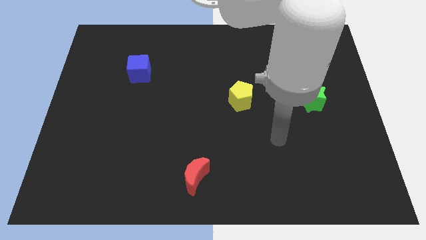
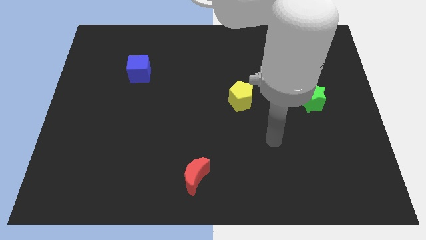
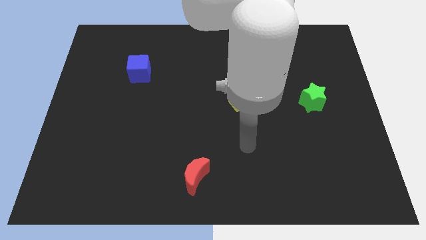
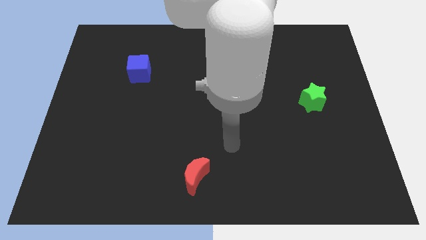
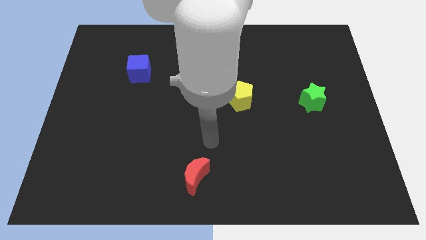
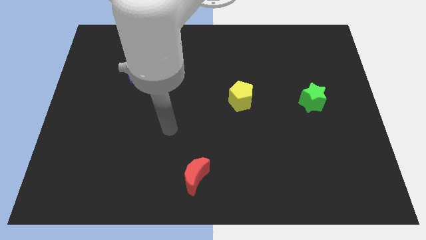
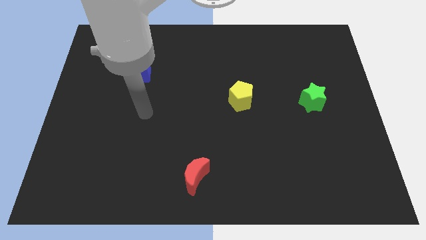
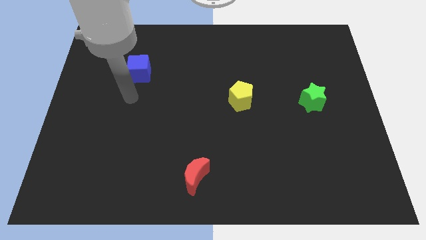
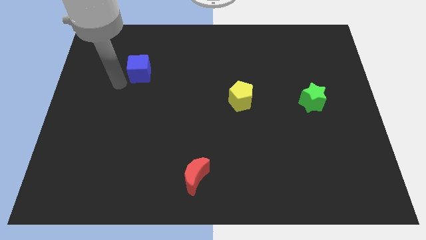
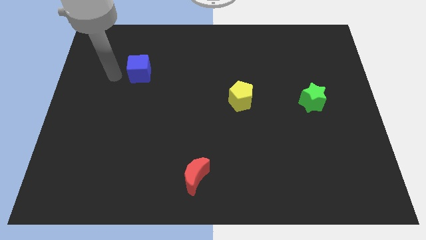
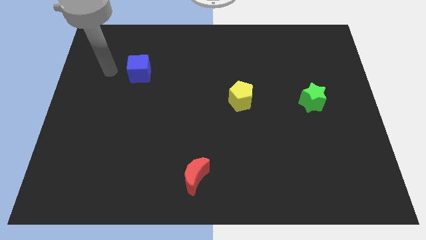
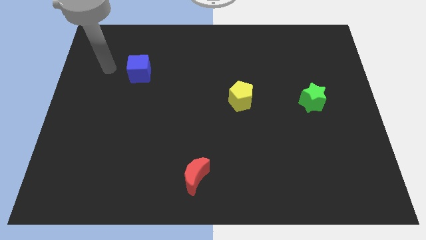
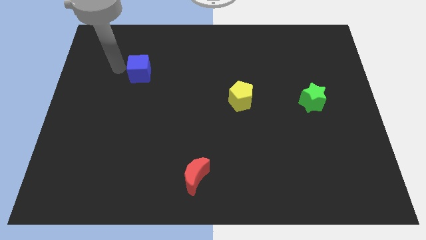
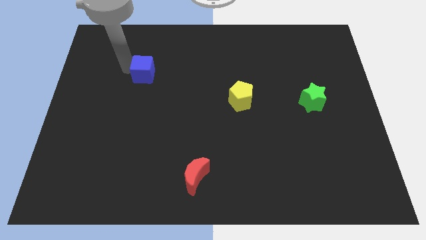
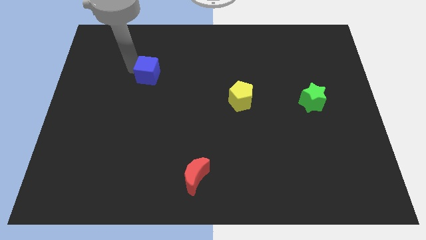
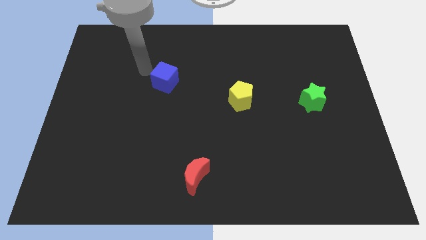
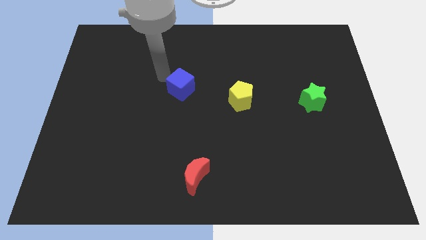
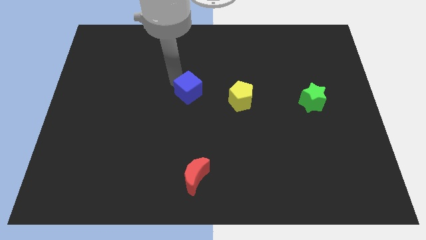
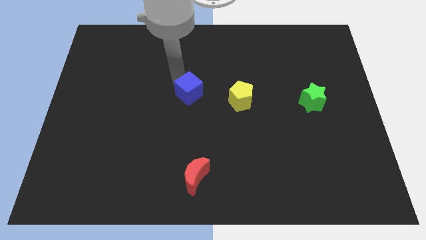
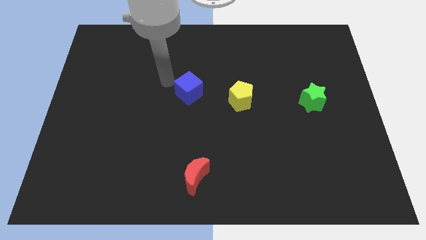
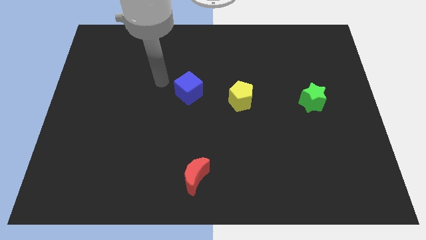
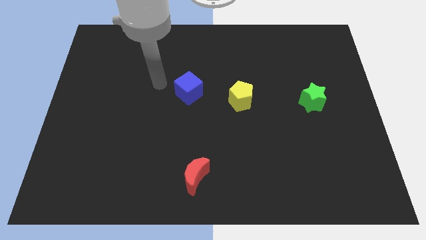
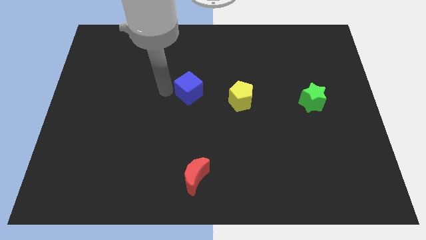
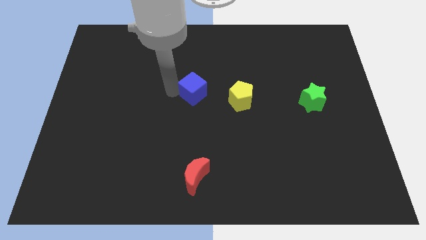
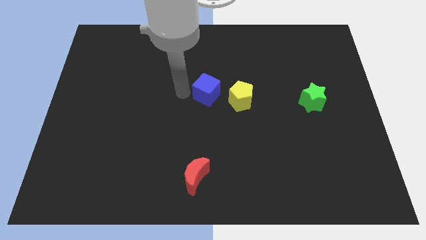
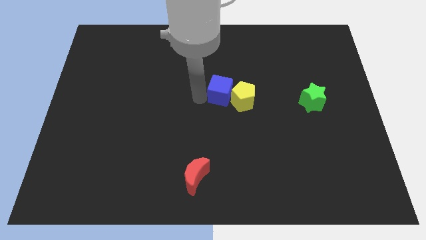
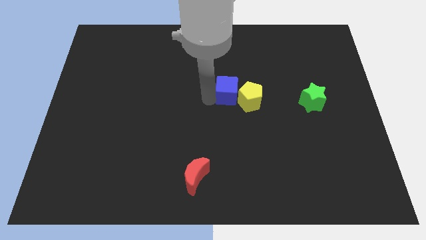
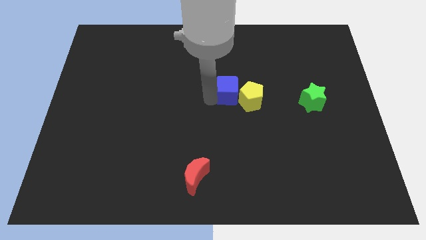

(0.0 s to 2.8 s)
move the blue block next to the yellow block

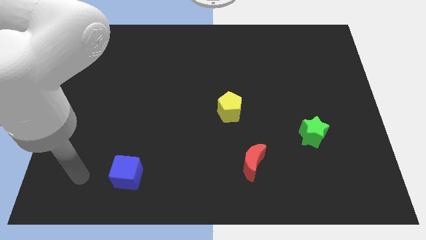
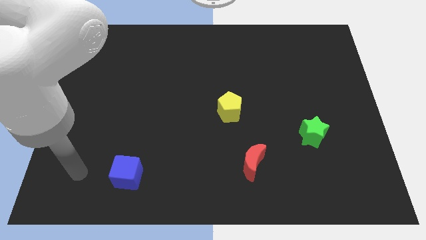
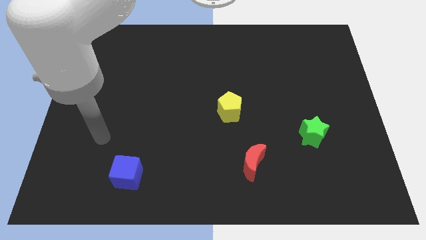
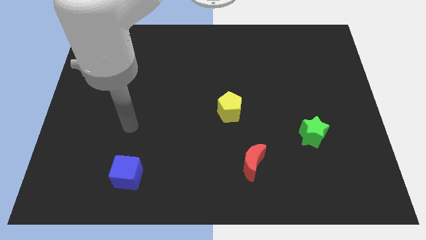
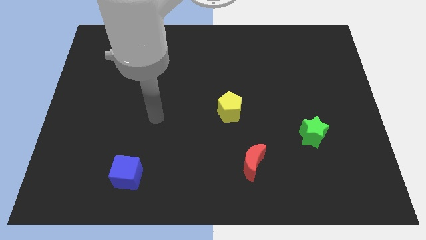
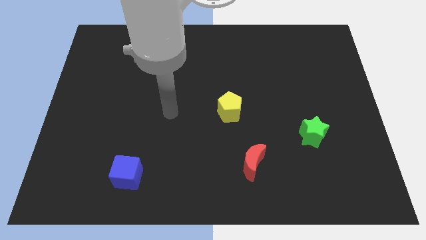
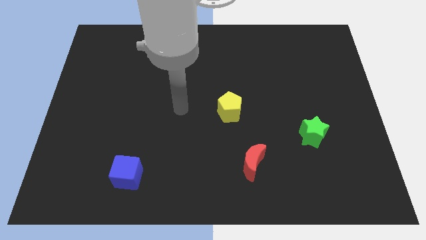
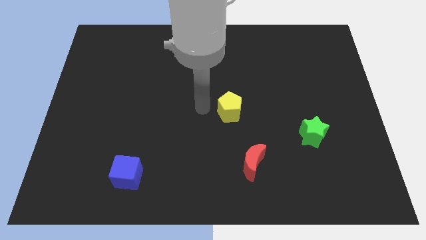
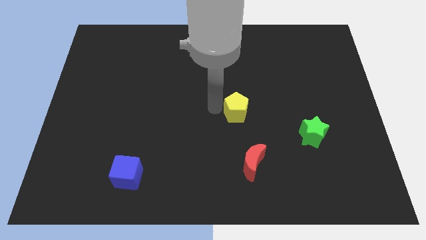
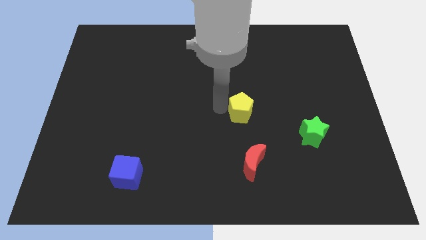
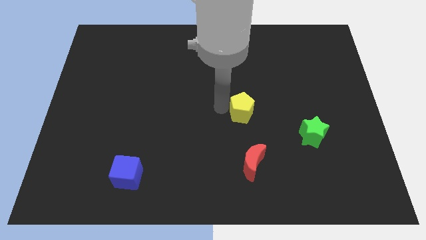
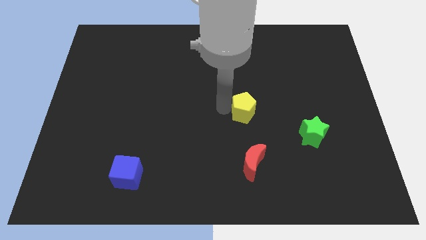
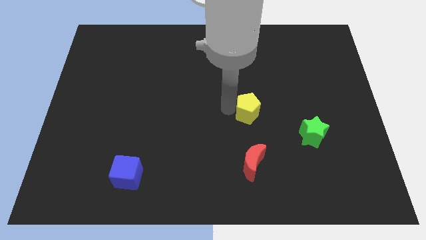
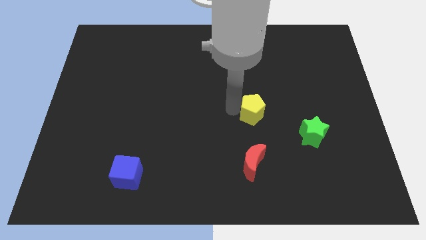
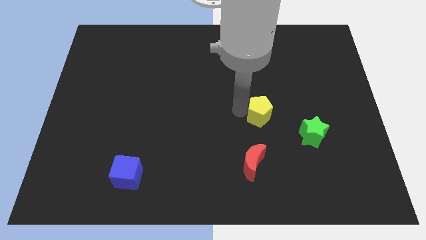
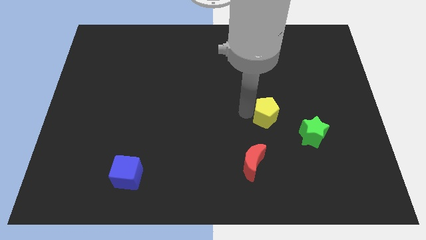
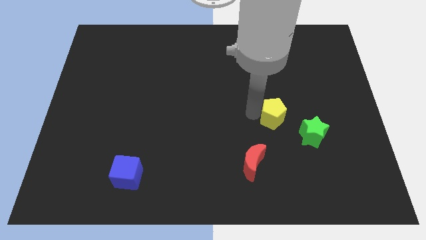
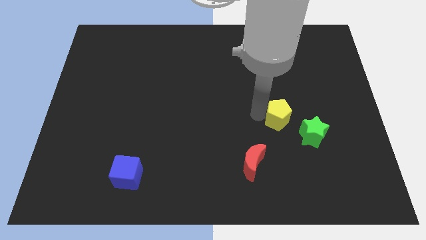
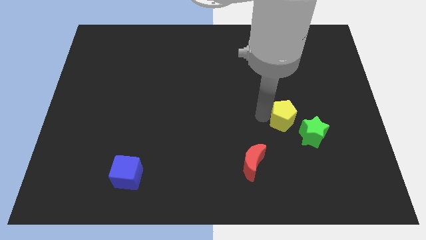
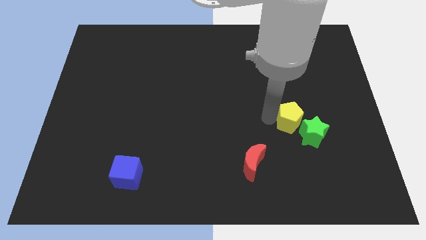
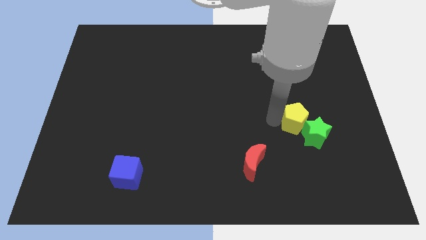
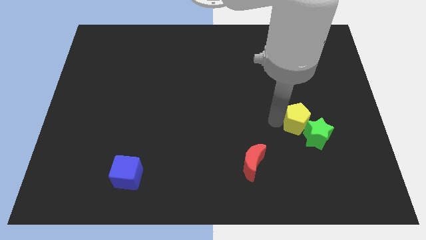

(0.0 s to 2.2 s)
push the yellow block towards the star

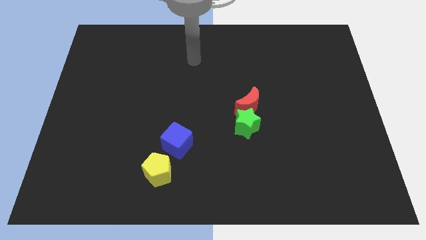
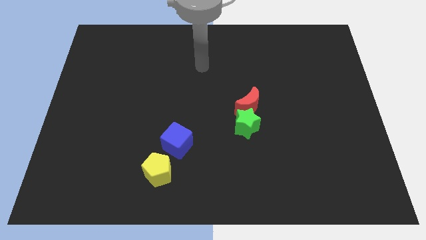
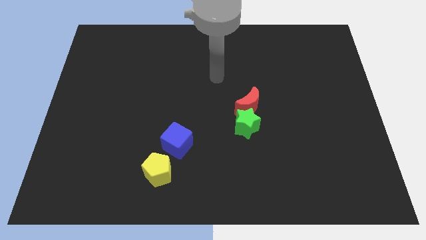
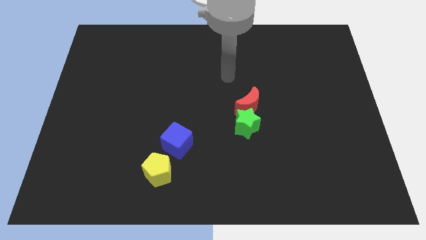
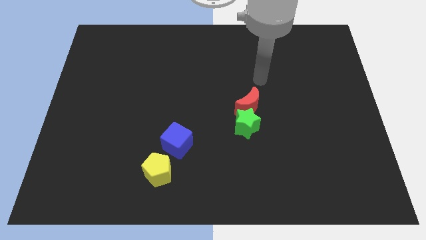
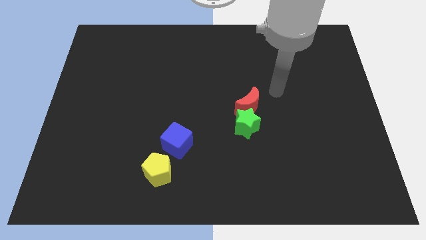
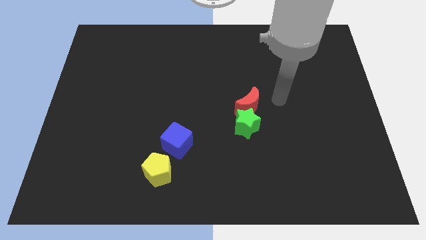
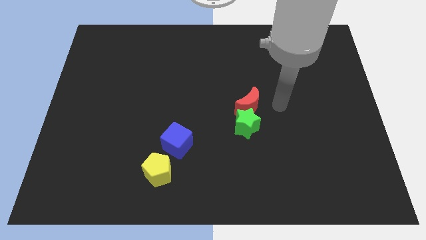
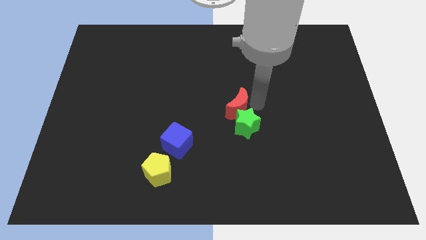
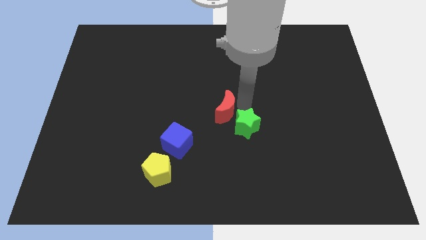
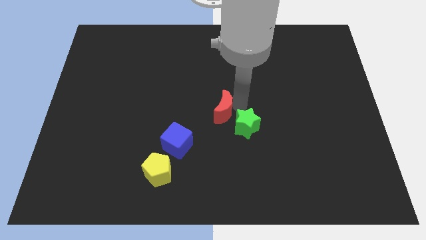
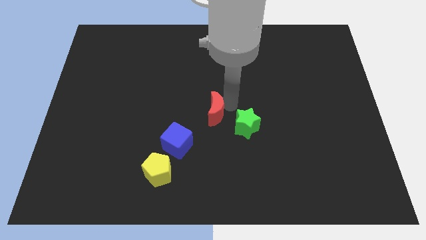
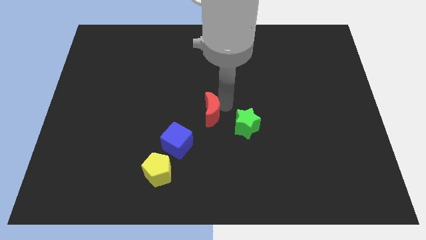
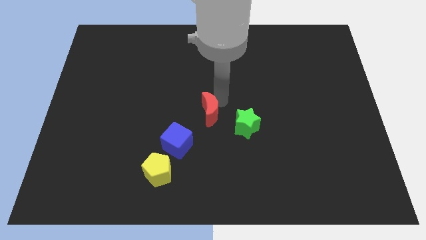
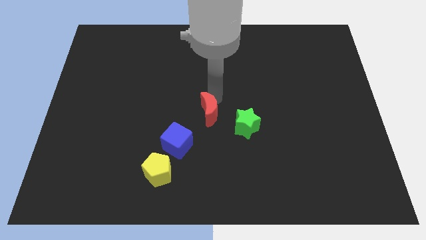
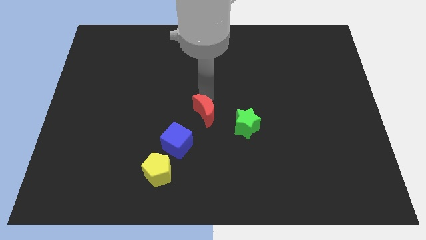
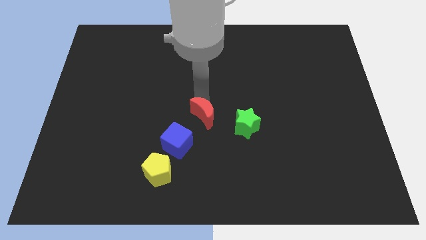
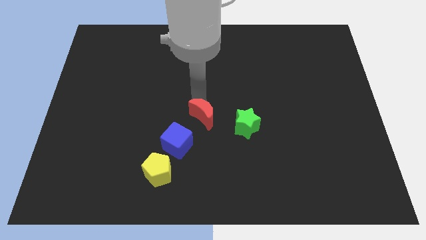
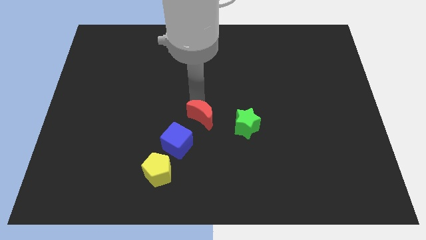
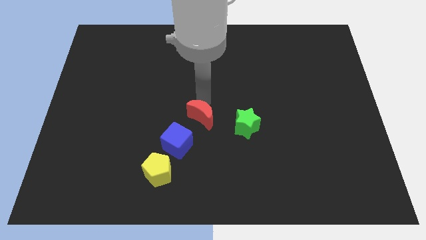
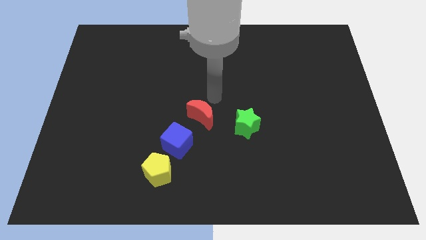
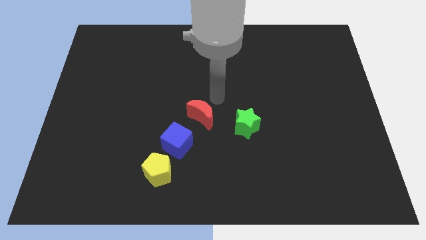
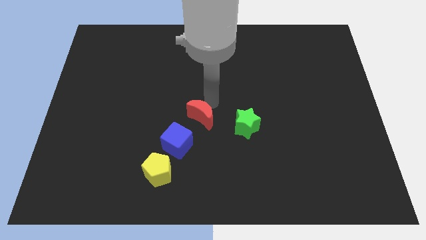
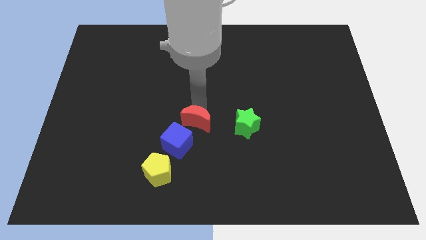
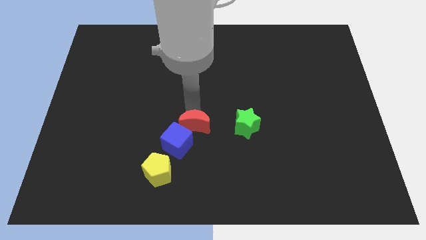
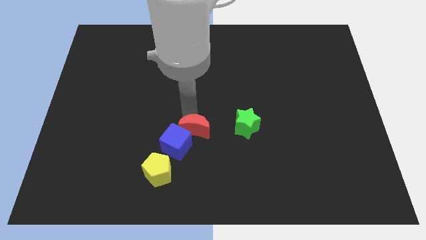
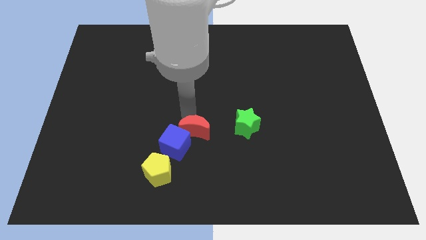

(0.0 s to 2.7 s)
push the red block towards the blue cube

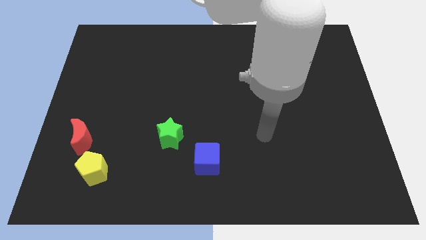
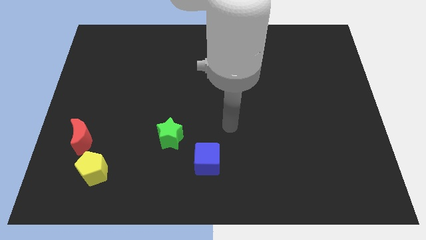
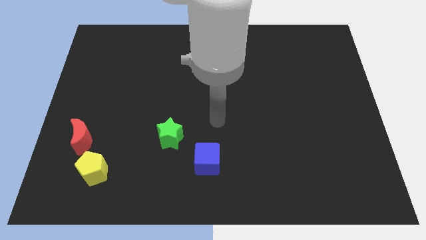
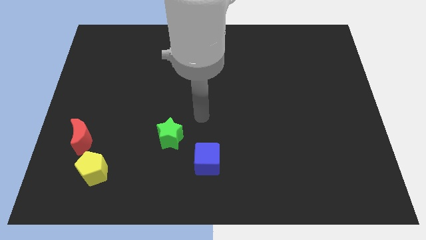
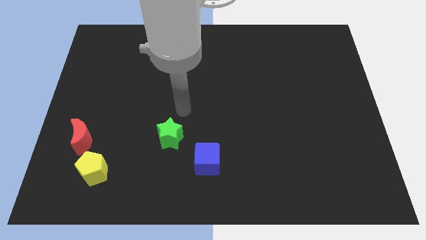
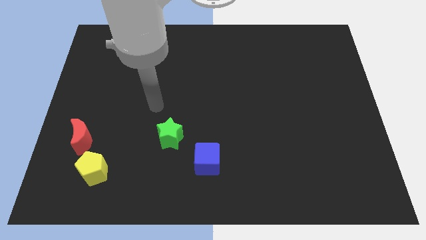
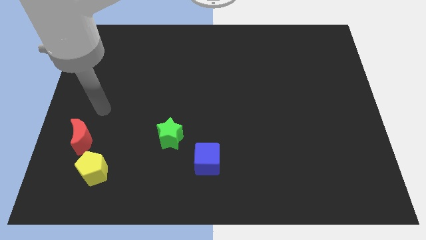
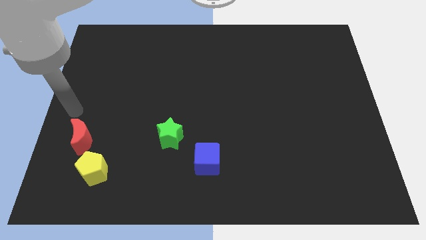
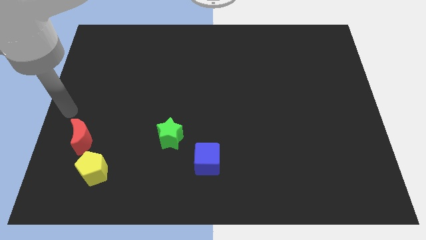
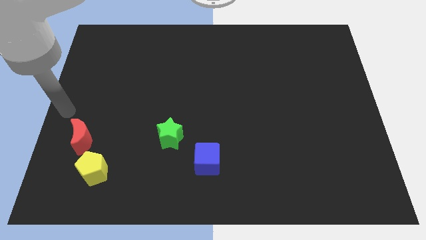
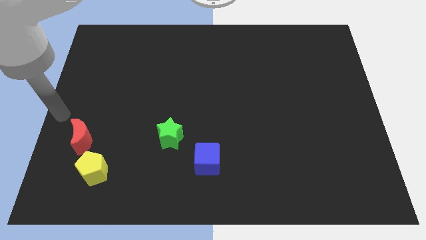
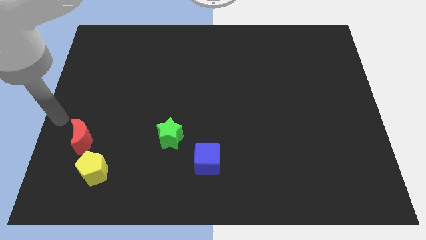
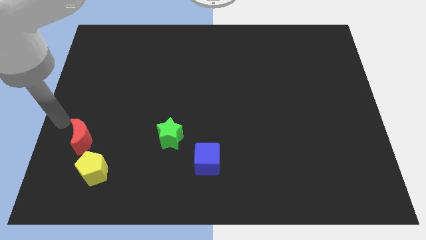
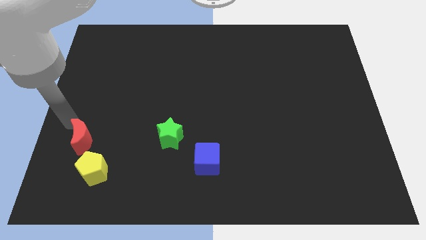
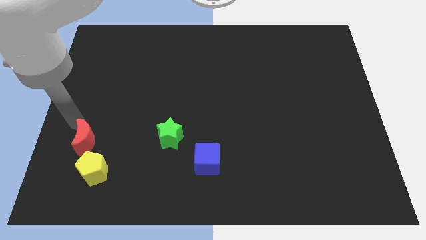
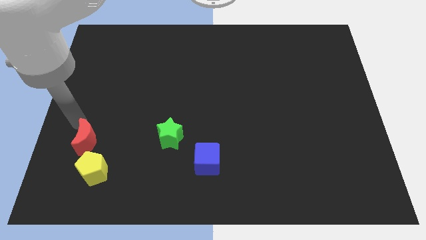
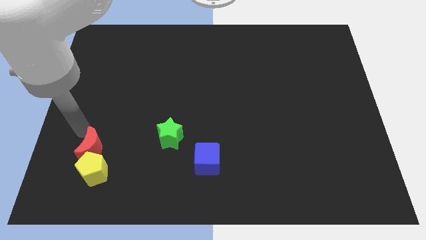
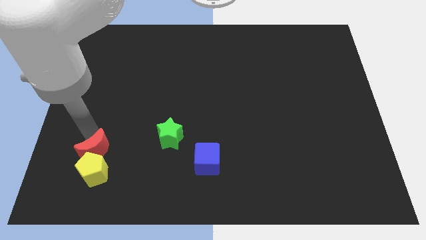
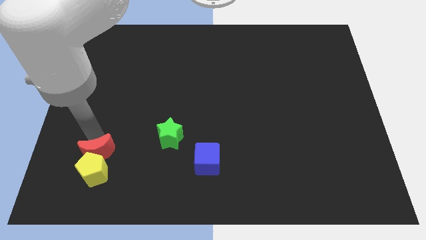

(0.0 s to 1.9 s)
move the moon to the yellow block
